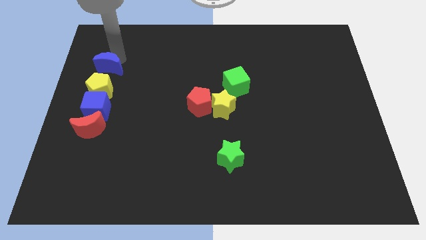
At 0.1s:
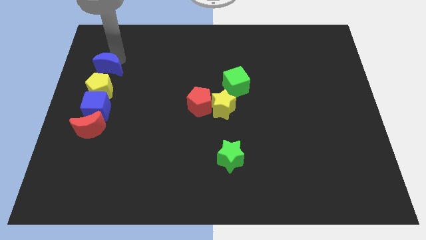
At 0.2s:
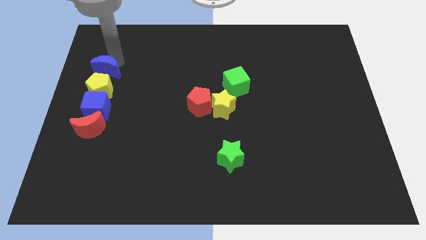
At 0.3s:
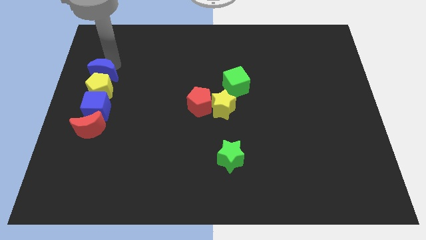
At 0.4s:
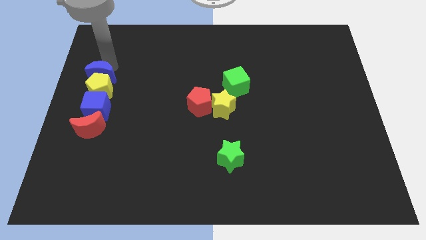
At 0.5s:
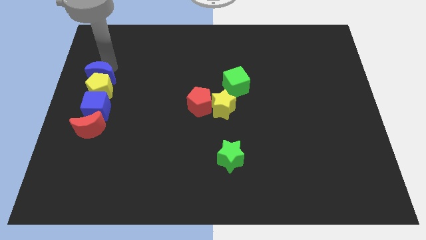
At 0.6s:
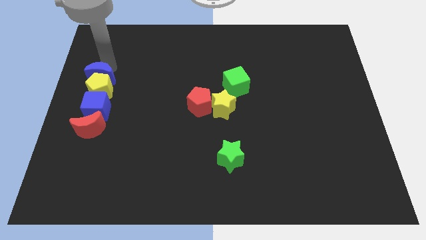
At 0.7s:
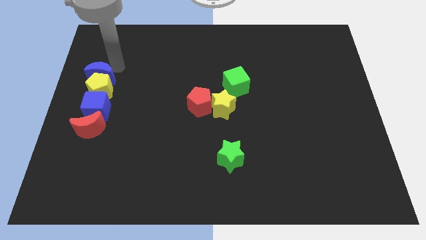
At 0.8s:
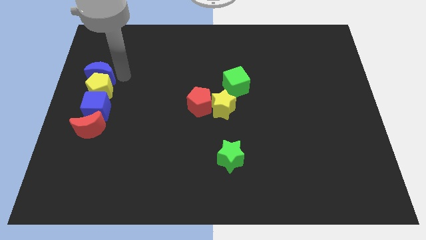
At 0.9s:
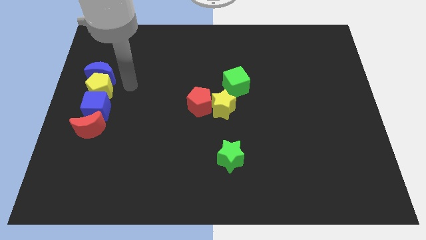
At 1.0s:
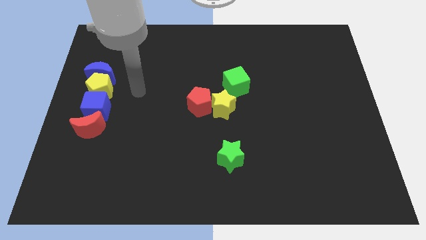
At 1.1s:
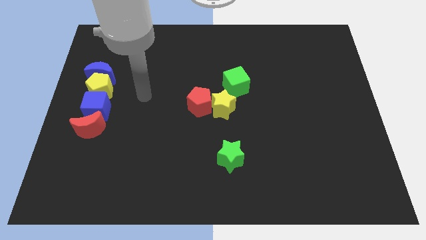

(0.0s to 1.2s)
move the blue crescent on top of the yellow pentagon

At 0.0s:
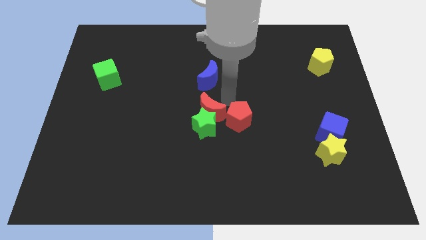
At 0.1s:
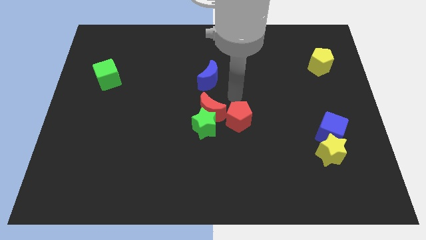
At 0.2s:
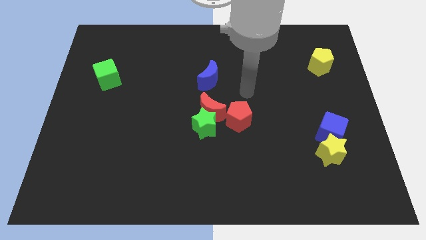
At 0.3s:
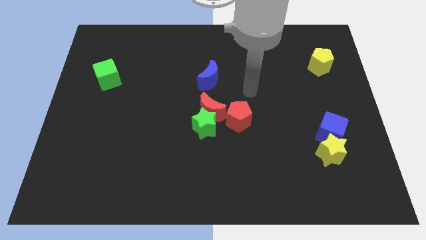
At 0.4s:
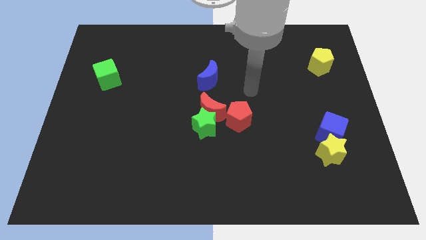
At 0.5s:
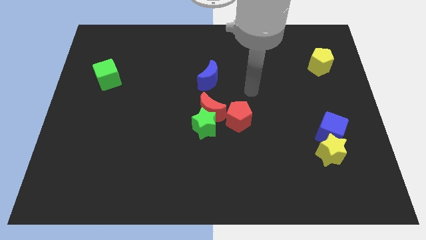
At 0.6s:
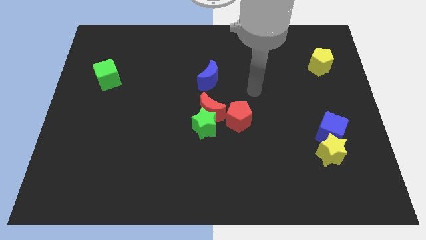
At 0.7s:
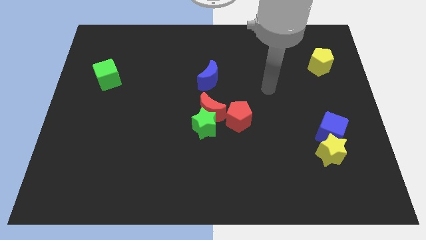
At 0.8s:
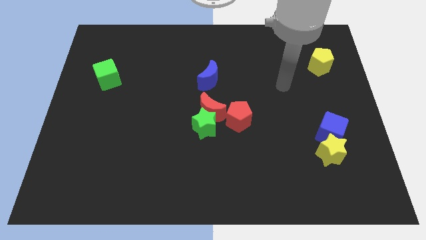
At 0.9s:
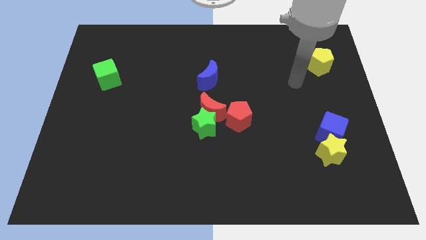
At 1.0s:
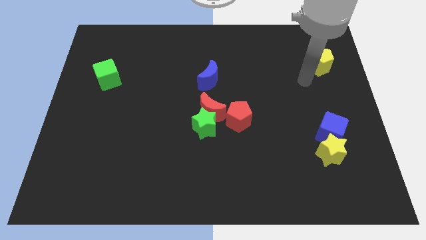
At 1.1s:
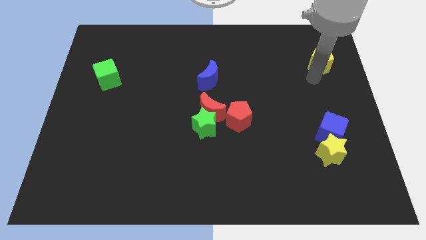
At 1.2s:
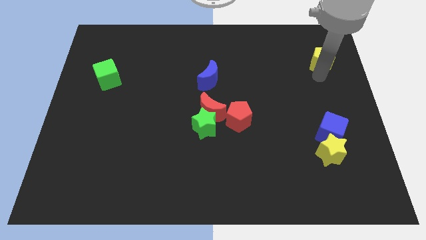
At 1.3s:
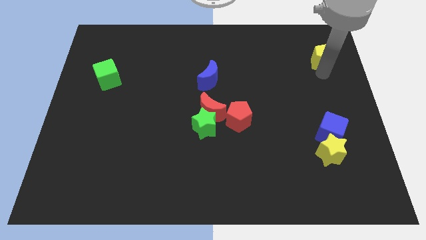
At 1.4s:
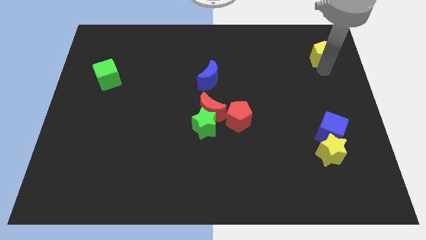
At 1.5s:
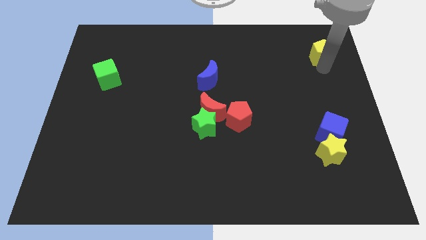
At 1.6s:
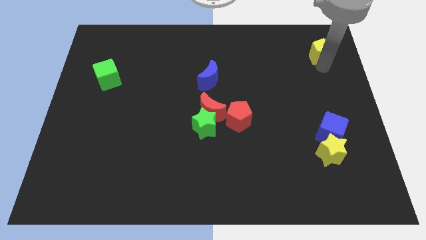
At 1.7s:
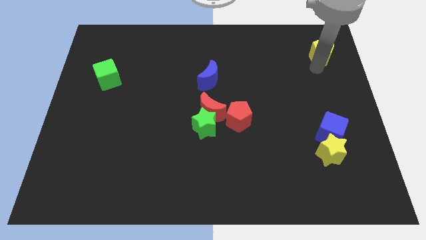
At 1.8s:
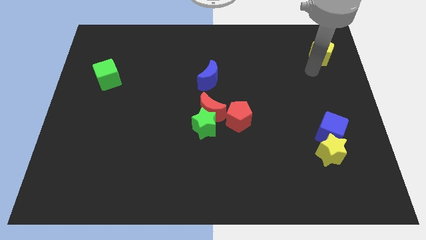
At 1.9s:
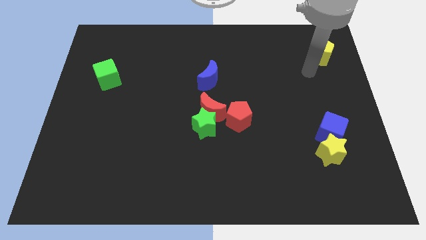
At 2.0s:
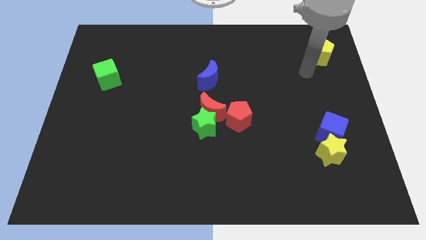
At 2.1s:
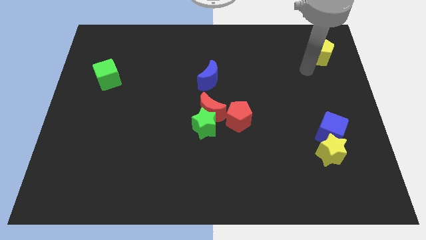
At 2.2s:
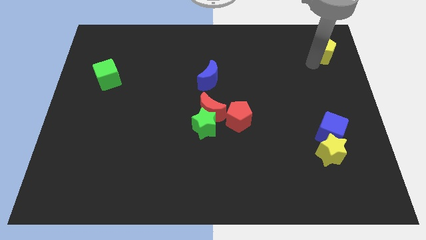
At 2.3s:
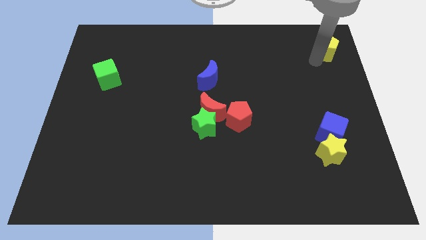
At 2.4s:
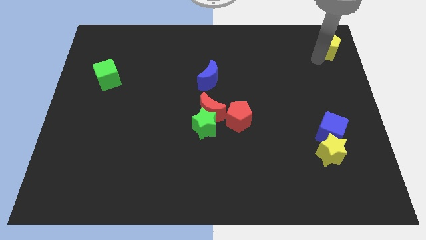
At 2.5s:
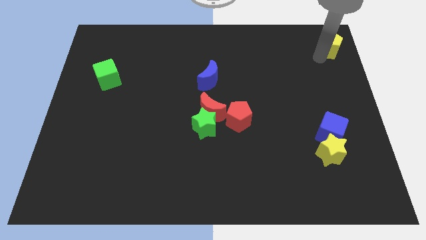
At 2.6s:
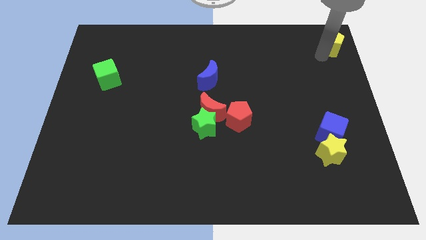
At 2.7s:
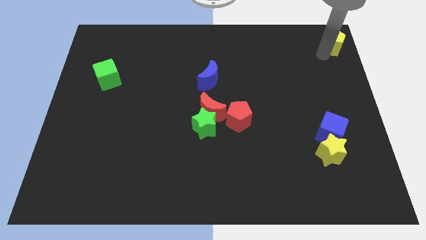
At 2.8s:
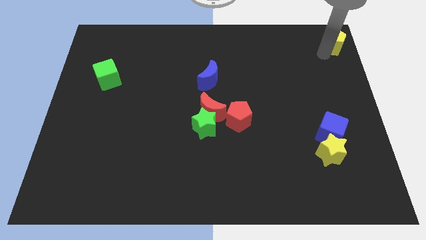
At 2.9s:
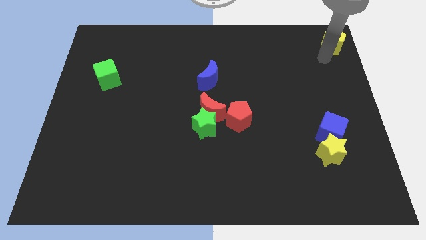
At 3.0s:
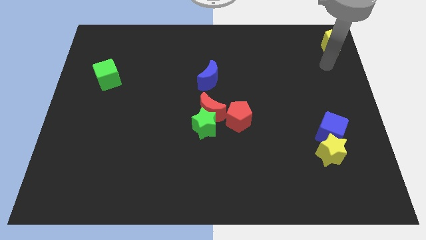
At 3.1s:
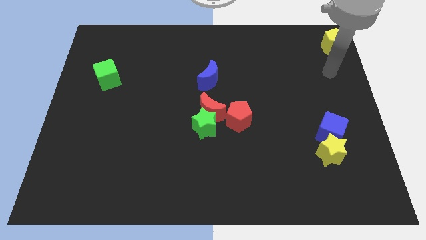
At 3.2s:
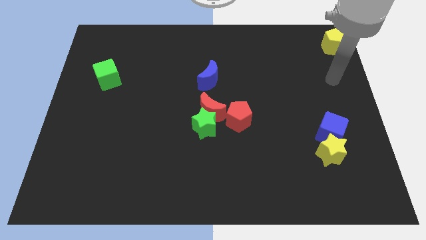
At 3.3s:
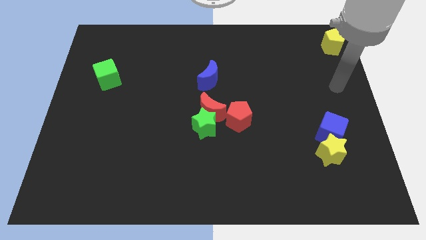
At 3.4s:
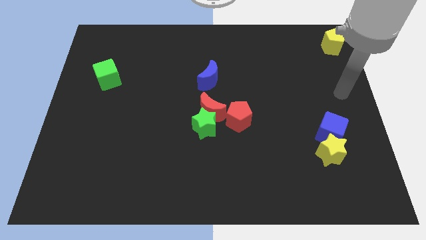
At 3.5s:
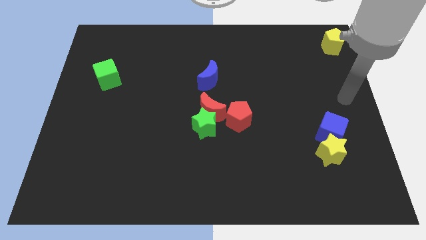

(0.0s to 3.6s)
move yellow pentagon to the top right

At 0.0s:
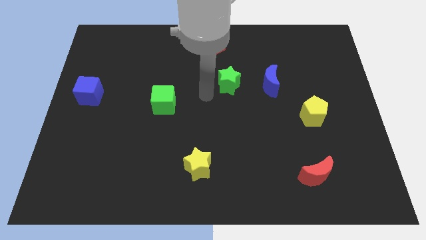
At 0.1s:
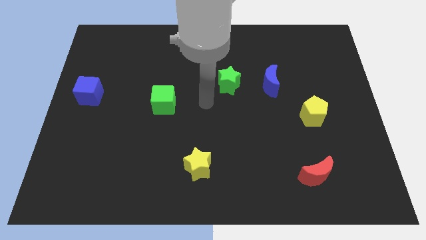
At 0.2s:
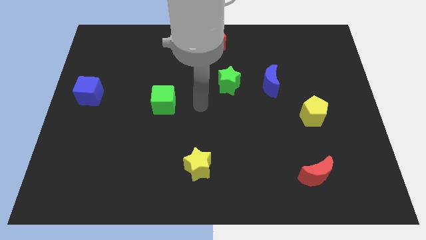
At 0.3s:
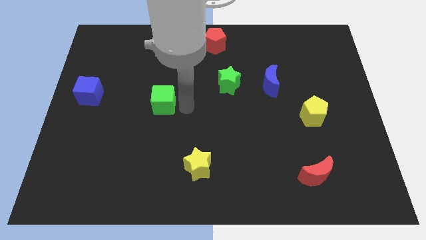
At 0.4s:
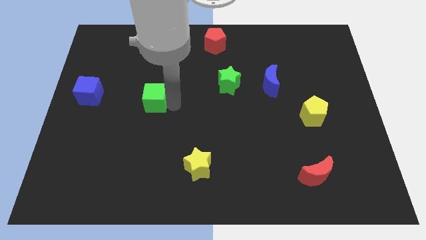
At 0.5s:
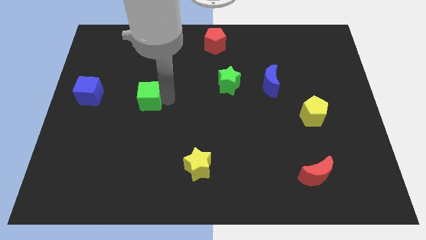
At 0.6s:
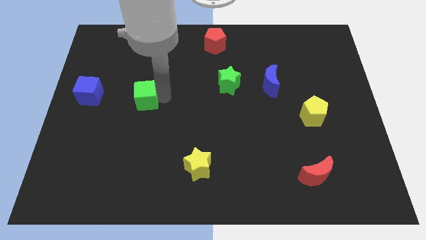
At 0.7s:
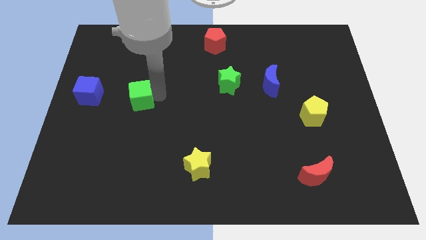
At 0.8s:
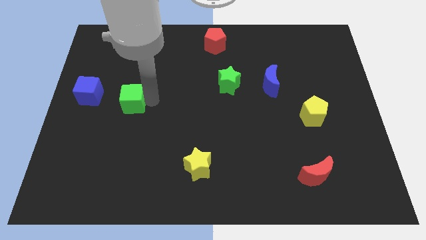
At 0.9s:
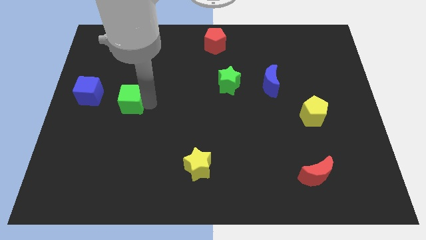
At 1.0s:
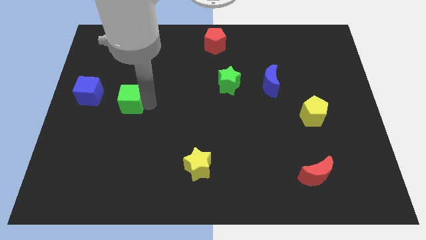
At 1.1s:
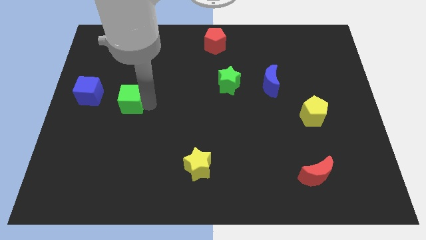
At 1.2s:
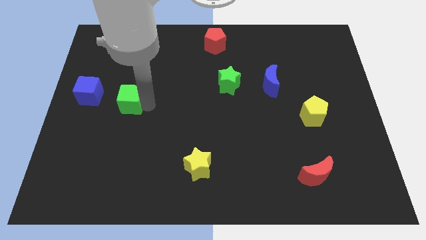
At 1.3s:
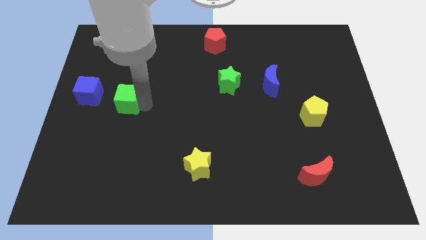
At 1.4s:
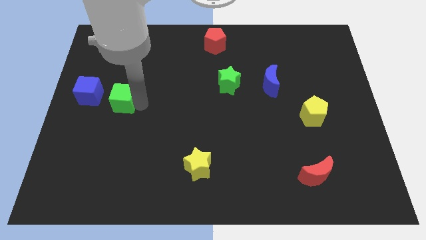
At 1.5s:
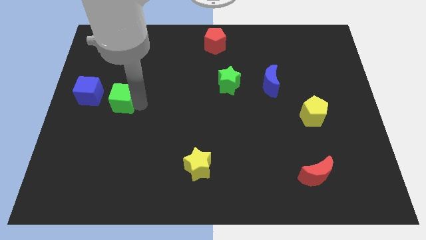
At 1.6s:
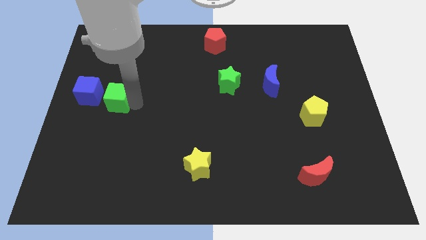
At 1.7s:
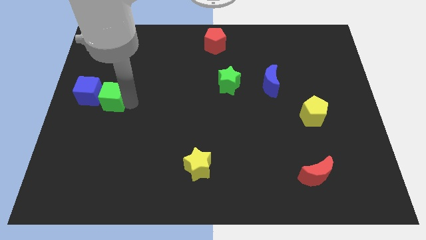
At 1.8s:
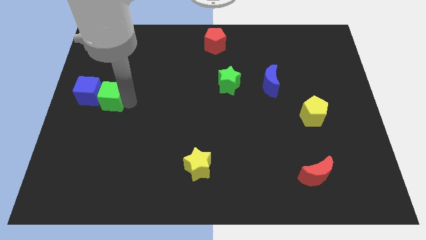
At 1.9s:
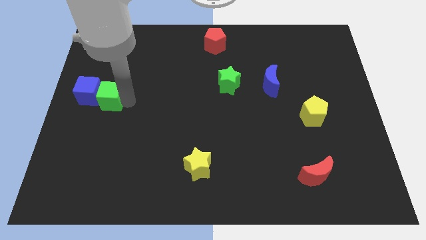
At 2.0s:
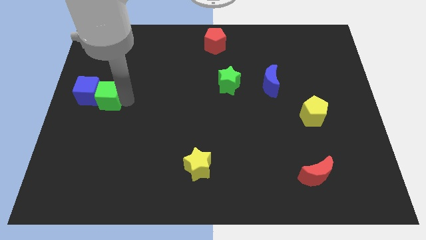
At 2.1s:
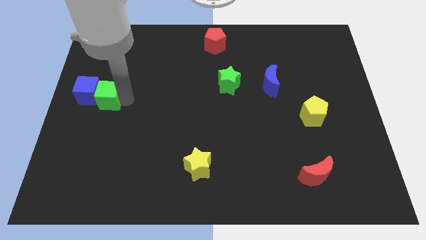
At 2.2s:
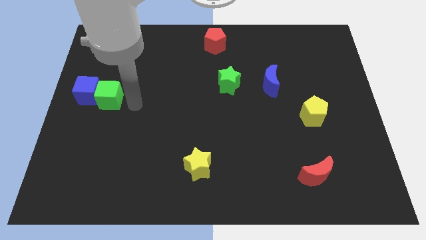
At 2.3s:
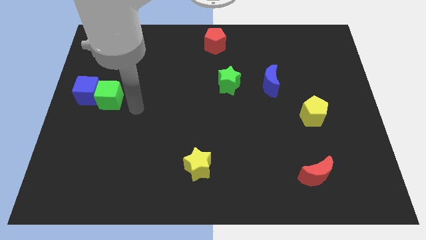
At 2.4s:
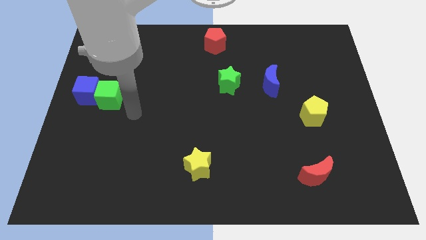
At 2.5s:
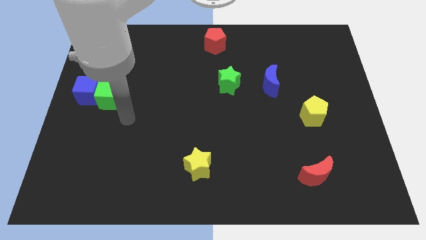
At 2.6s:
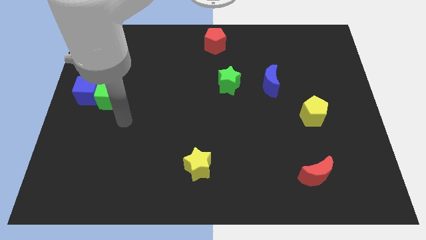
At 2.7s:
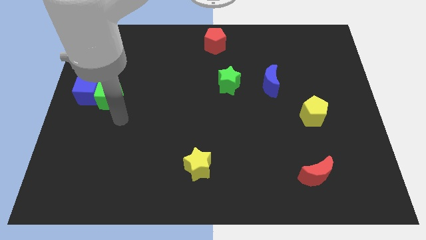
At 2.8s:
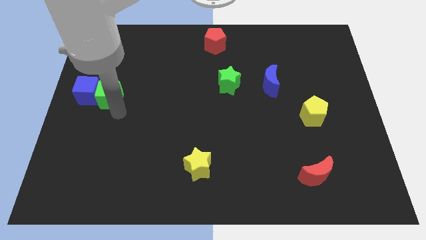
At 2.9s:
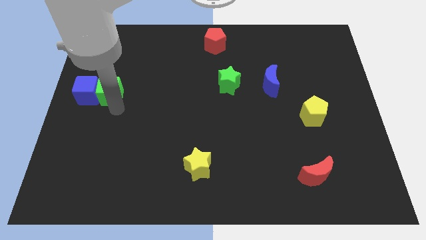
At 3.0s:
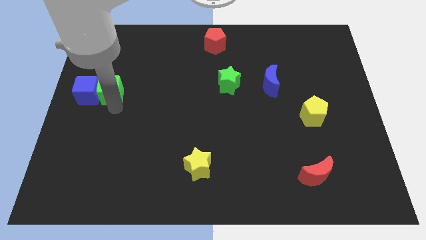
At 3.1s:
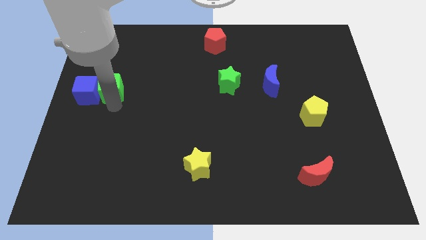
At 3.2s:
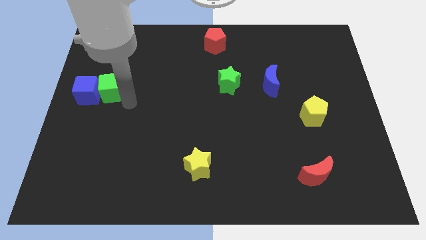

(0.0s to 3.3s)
push green cube into blue cube

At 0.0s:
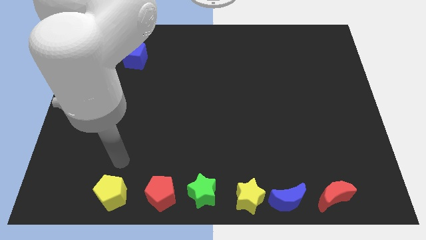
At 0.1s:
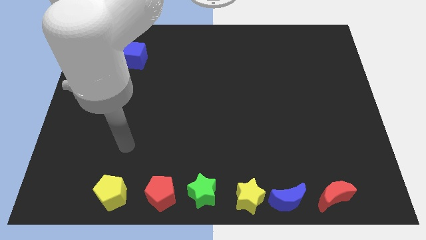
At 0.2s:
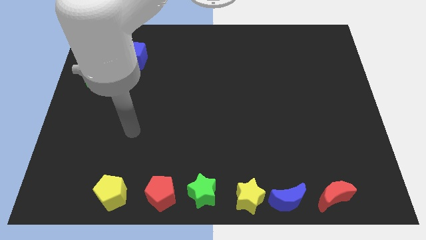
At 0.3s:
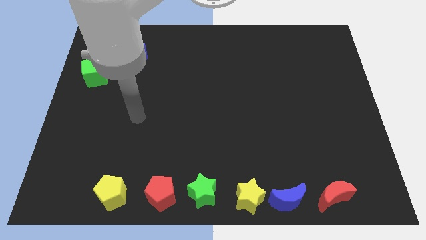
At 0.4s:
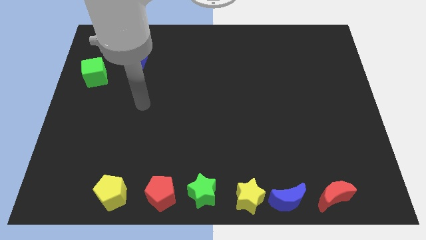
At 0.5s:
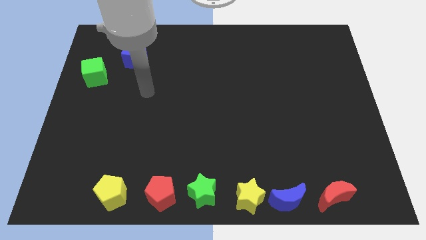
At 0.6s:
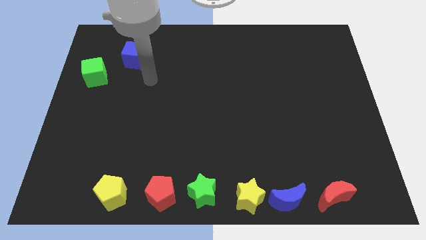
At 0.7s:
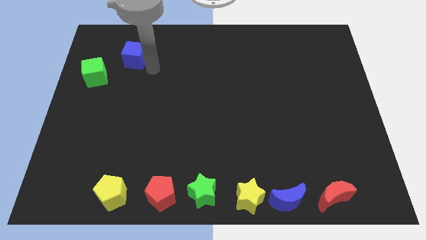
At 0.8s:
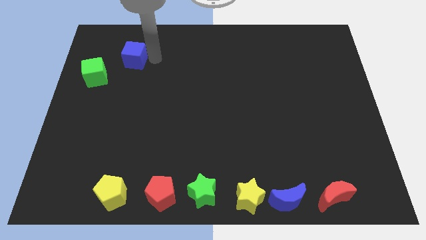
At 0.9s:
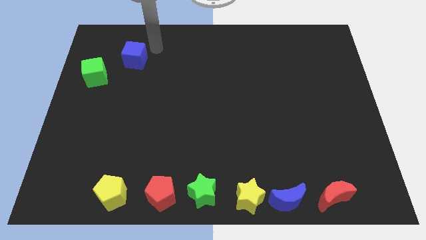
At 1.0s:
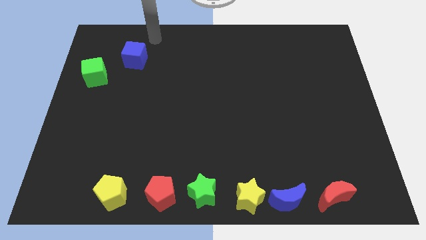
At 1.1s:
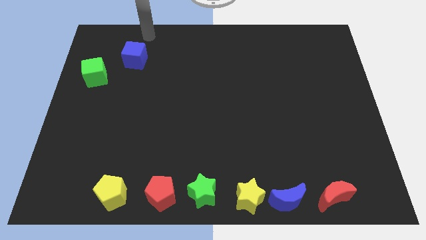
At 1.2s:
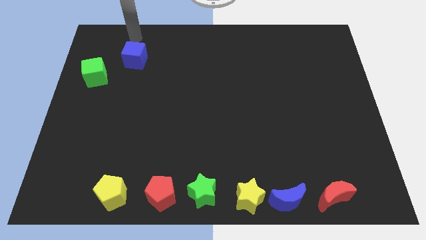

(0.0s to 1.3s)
place your hand above the blue cube
